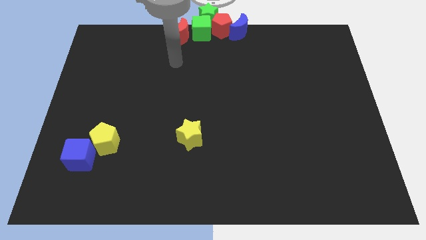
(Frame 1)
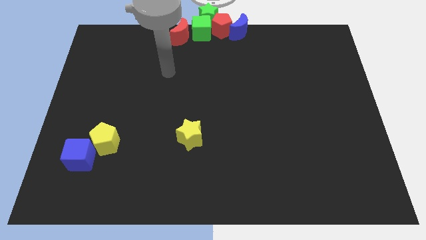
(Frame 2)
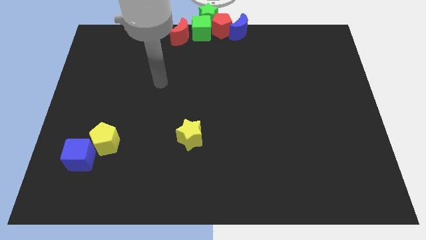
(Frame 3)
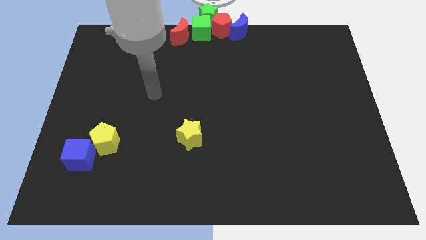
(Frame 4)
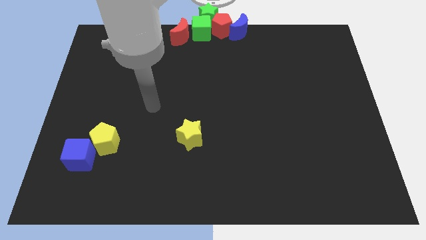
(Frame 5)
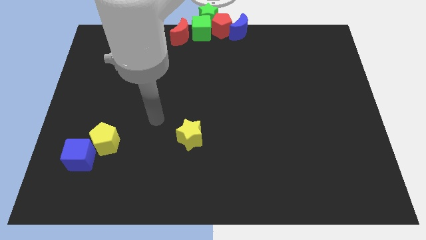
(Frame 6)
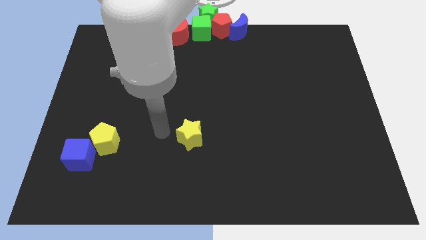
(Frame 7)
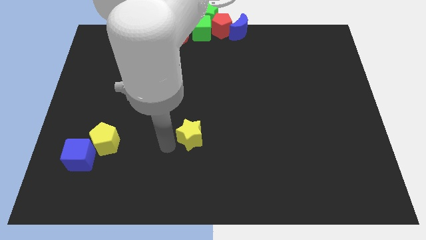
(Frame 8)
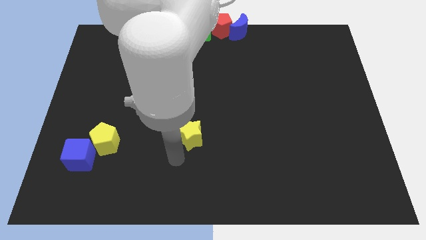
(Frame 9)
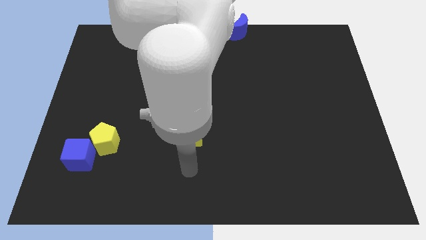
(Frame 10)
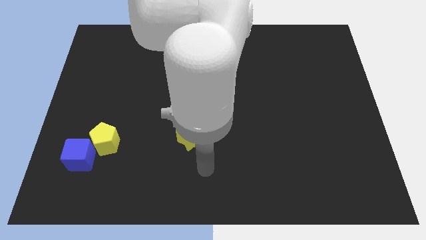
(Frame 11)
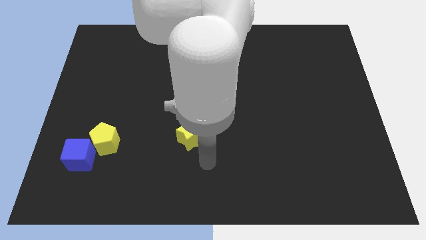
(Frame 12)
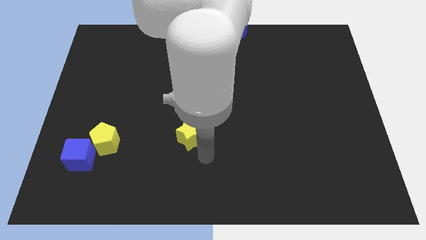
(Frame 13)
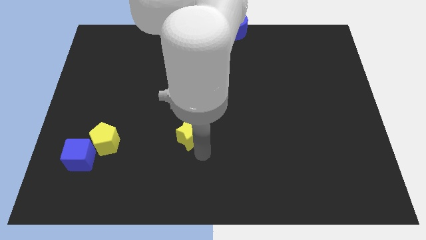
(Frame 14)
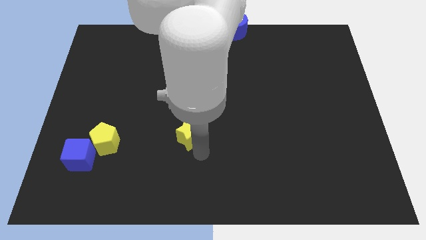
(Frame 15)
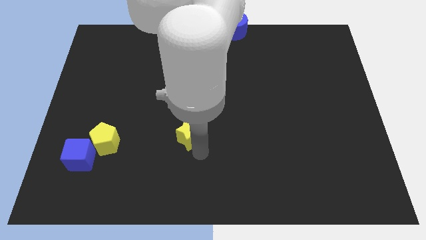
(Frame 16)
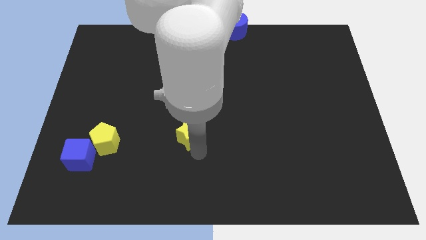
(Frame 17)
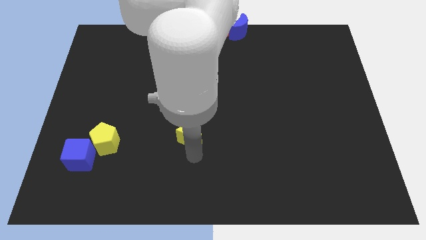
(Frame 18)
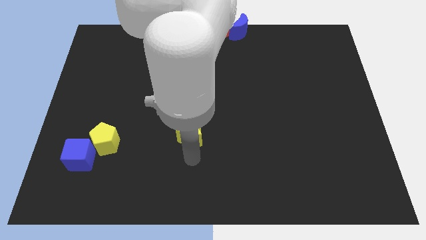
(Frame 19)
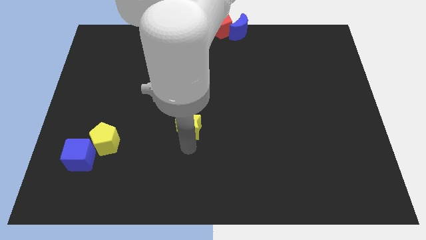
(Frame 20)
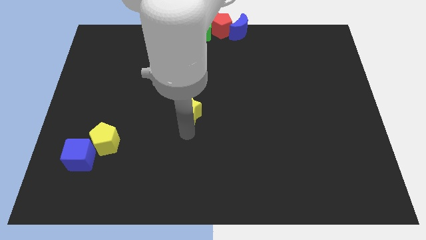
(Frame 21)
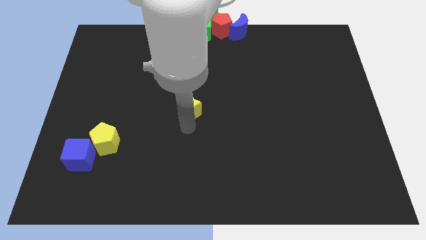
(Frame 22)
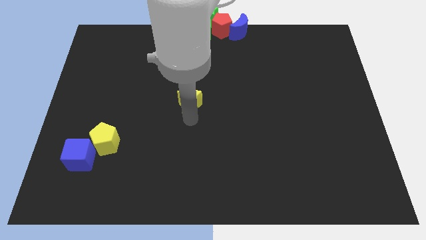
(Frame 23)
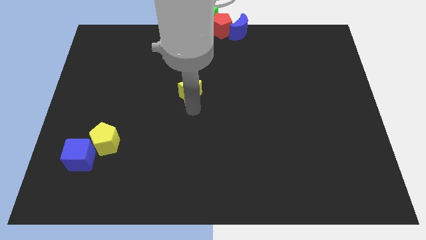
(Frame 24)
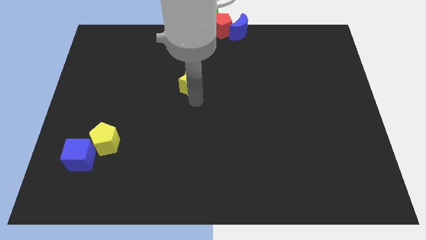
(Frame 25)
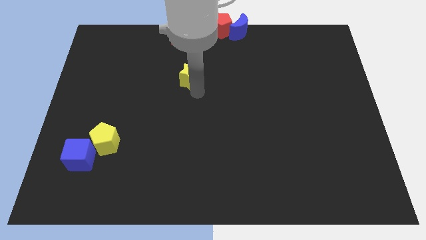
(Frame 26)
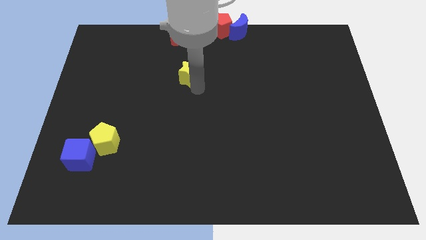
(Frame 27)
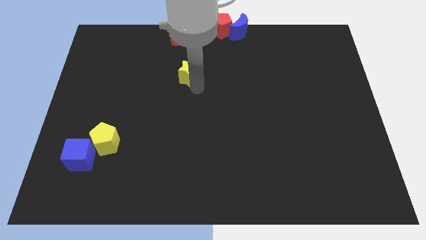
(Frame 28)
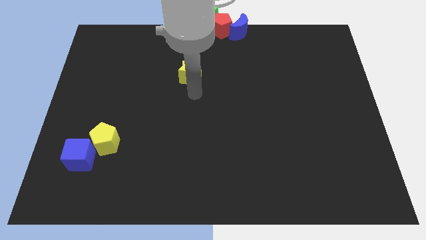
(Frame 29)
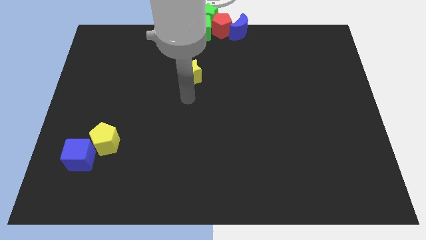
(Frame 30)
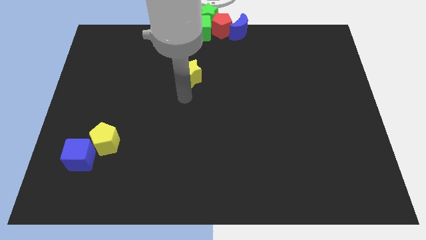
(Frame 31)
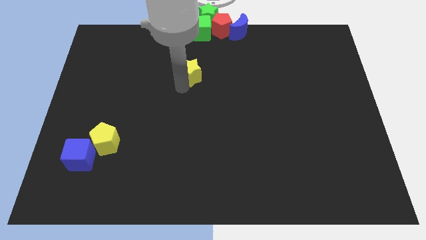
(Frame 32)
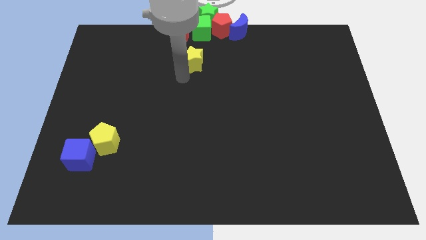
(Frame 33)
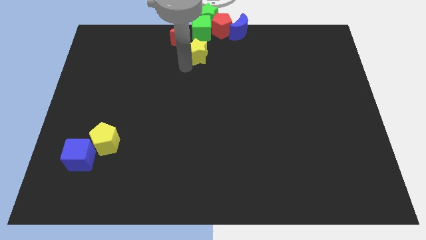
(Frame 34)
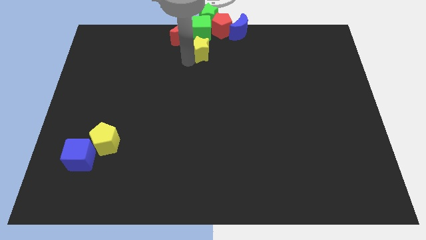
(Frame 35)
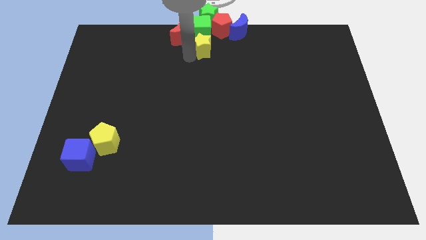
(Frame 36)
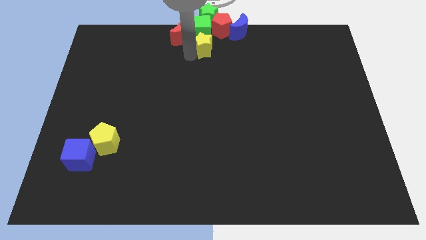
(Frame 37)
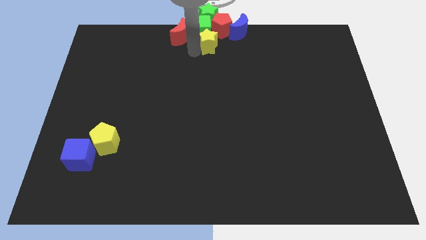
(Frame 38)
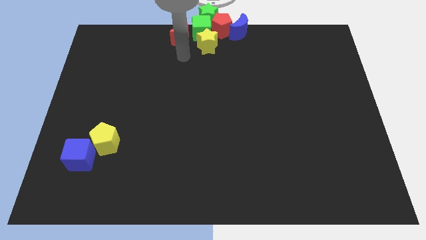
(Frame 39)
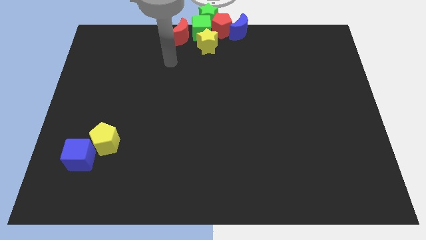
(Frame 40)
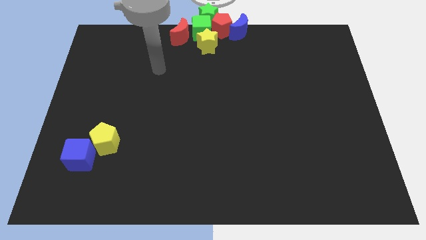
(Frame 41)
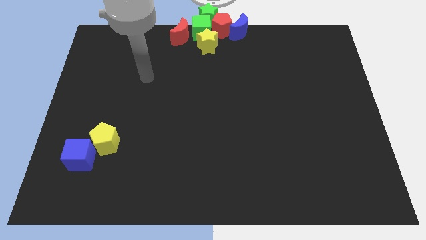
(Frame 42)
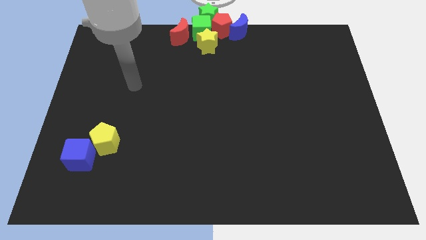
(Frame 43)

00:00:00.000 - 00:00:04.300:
place the yellow star below the green cube

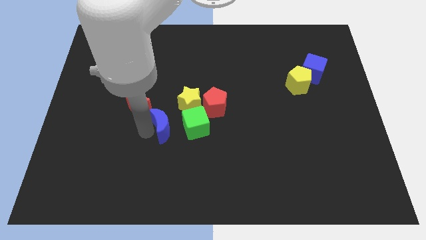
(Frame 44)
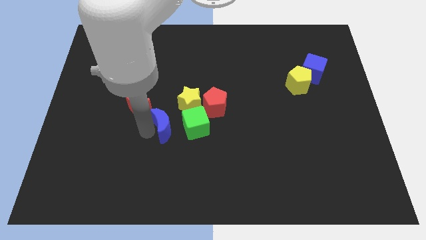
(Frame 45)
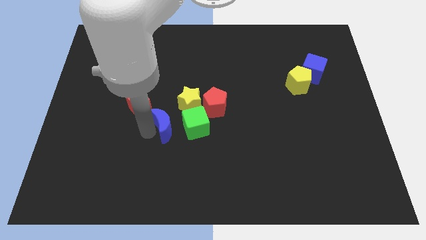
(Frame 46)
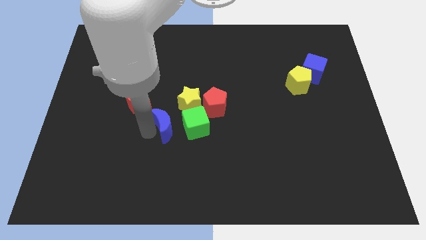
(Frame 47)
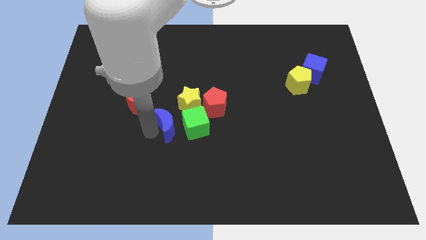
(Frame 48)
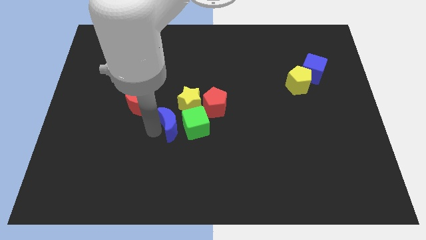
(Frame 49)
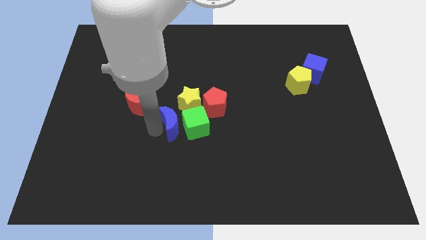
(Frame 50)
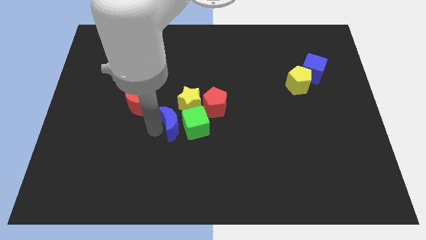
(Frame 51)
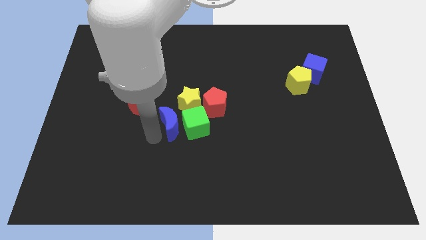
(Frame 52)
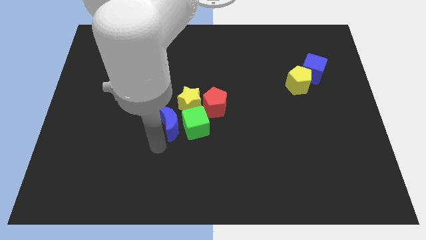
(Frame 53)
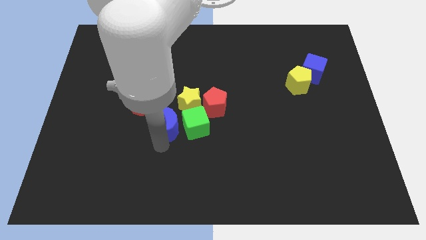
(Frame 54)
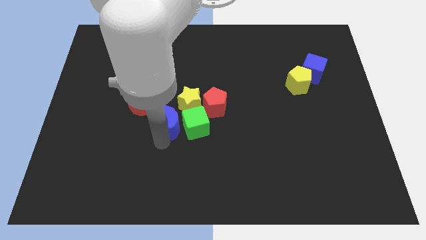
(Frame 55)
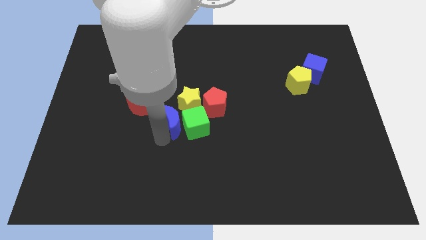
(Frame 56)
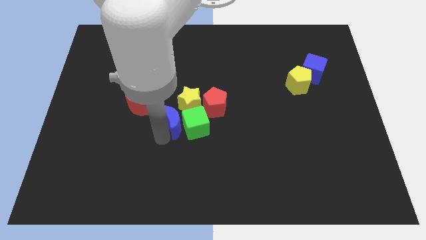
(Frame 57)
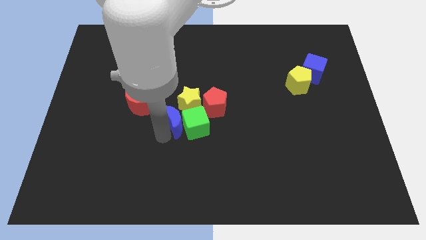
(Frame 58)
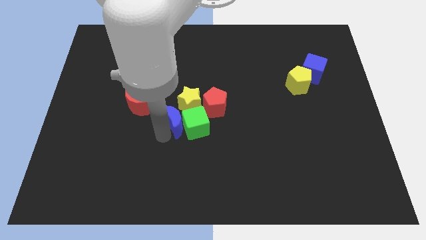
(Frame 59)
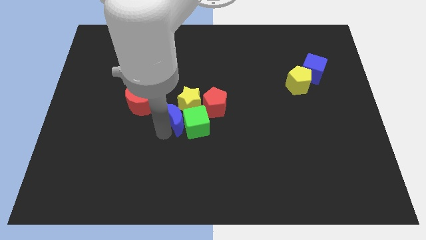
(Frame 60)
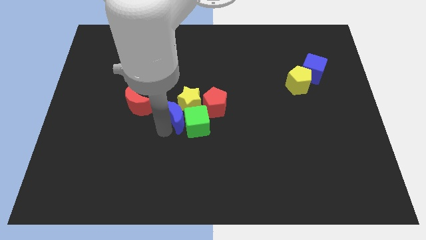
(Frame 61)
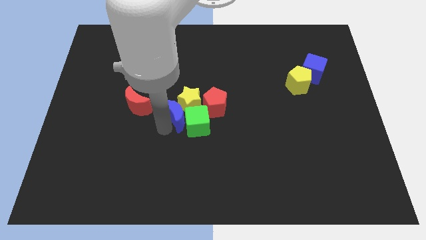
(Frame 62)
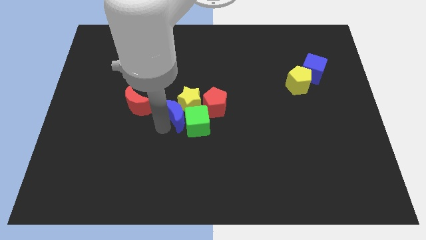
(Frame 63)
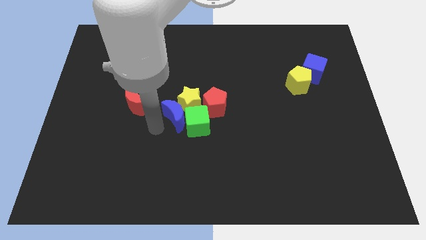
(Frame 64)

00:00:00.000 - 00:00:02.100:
place the blue crescent into yellow star and green cube

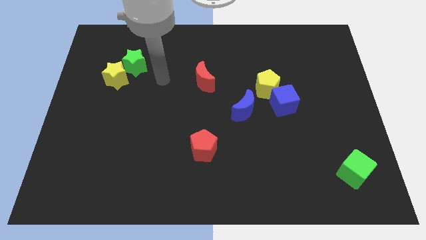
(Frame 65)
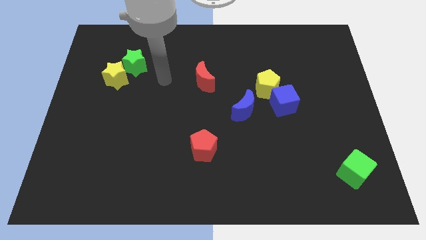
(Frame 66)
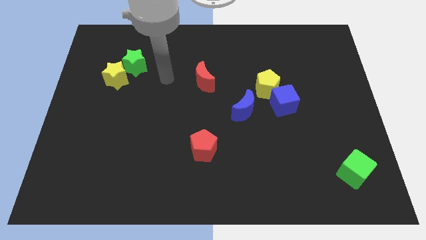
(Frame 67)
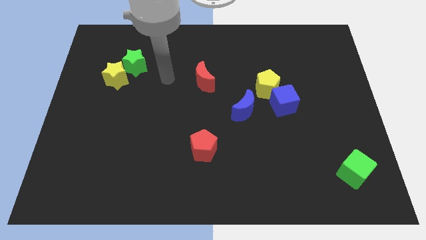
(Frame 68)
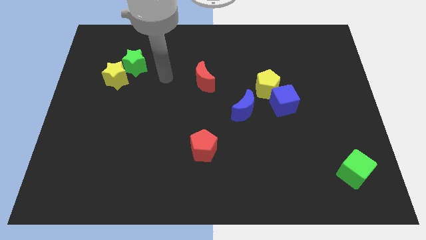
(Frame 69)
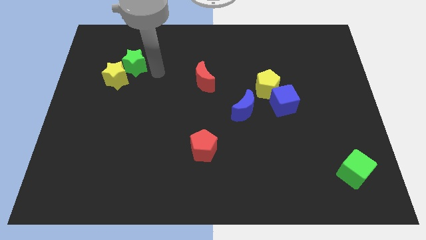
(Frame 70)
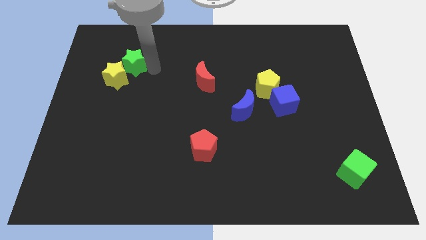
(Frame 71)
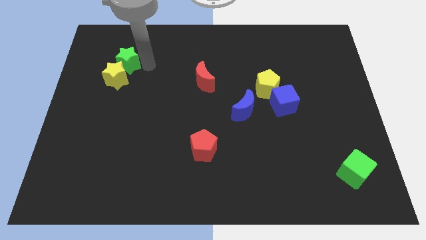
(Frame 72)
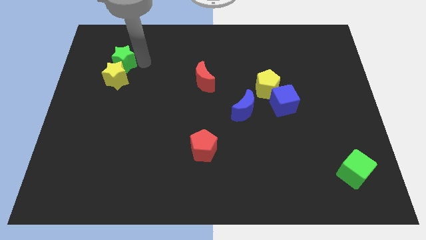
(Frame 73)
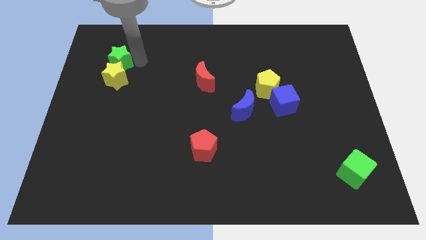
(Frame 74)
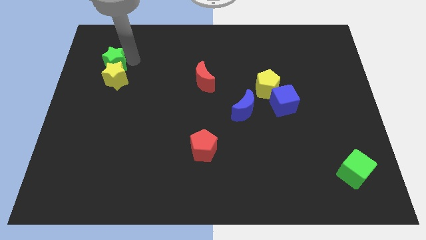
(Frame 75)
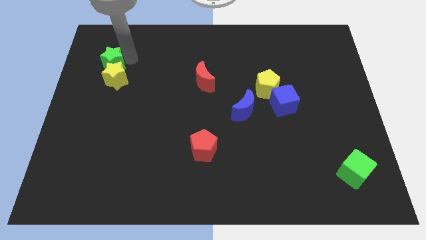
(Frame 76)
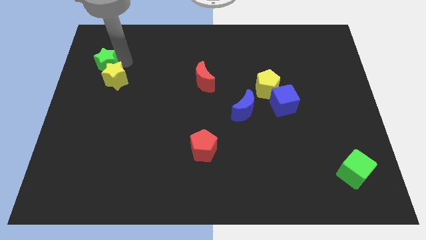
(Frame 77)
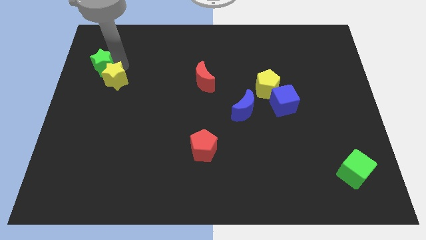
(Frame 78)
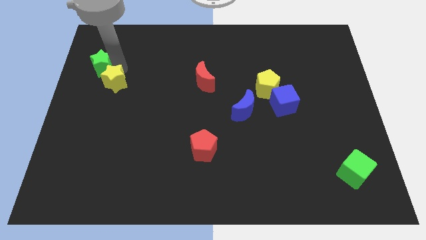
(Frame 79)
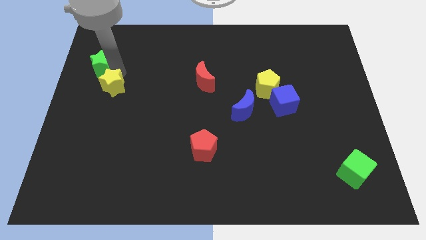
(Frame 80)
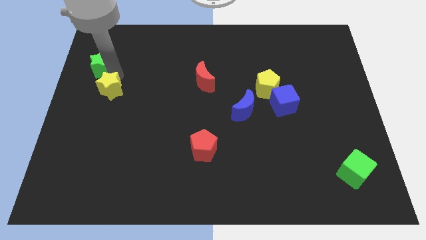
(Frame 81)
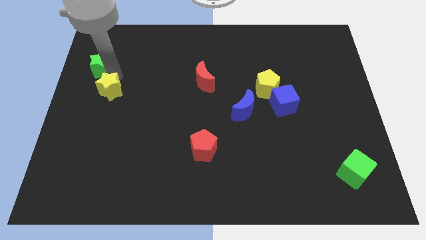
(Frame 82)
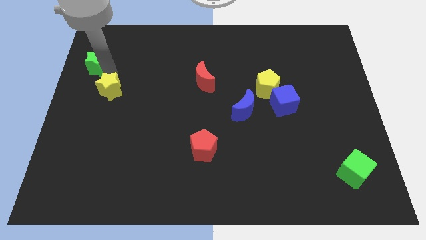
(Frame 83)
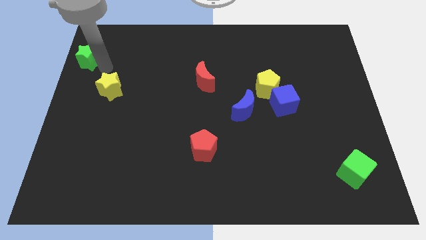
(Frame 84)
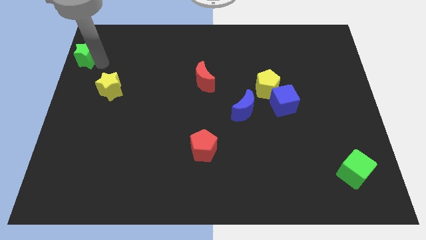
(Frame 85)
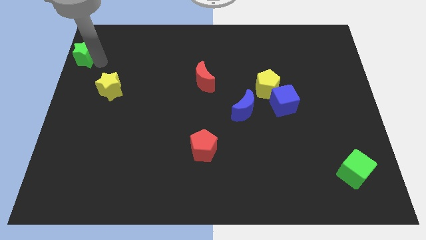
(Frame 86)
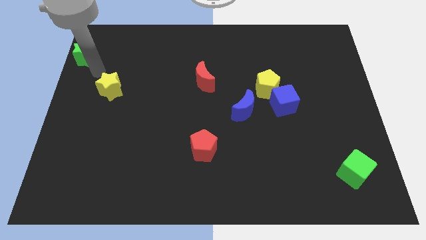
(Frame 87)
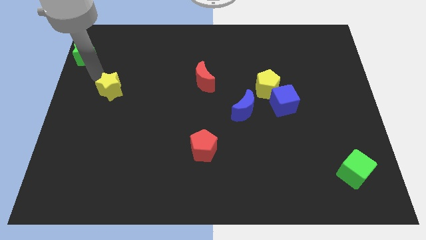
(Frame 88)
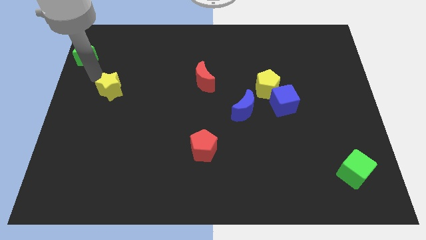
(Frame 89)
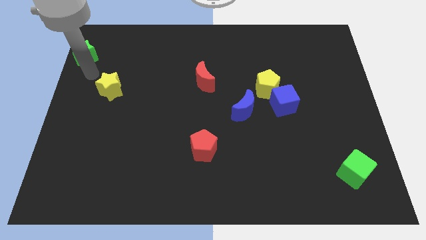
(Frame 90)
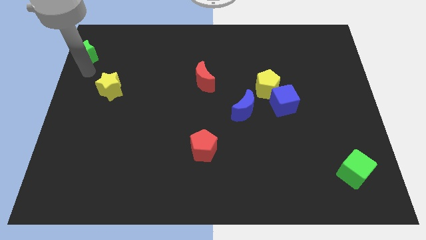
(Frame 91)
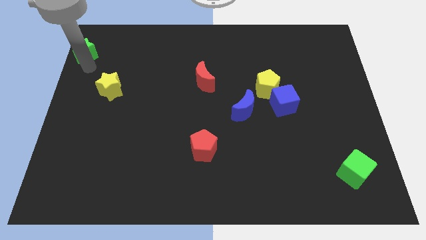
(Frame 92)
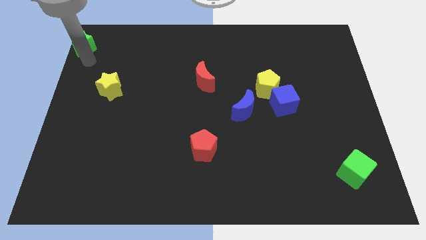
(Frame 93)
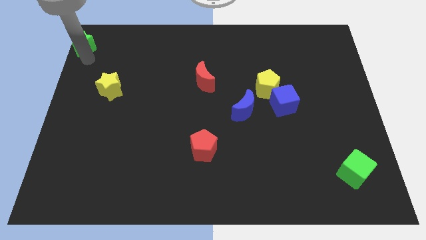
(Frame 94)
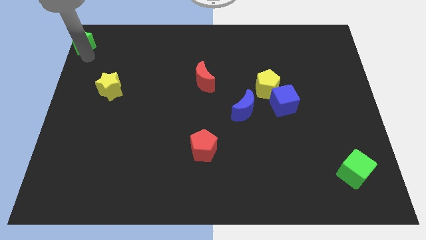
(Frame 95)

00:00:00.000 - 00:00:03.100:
separate the yellow star and the green star
